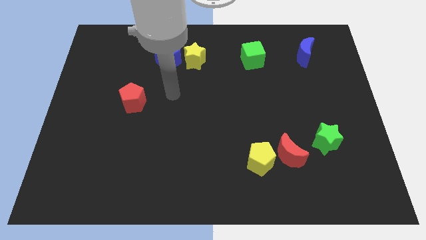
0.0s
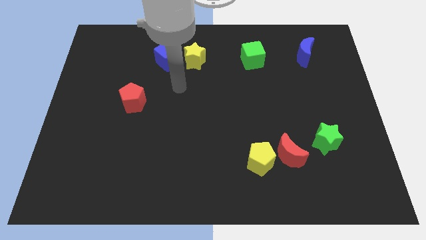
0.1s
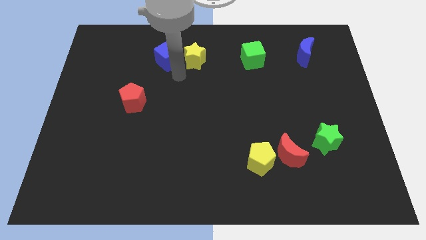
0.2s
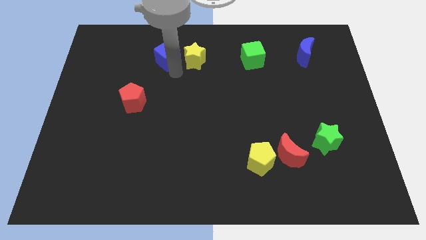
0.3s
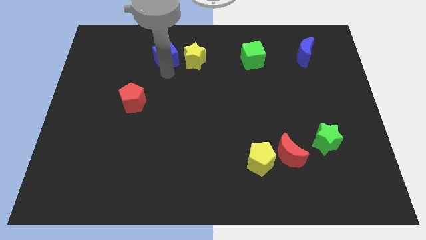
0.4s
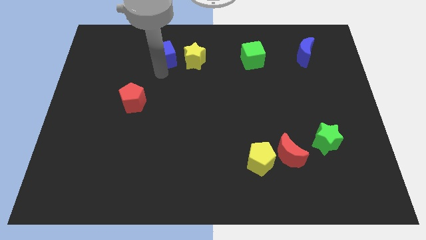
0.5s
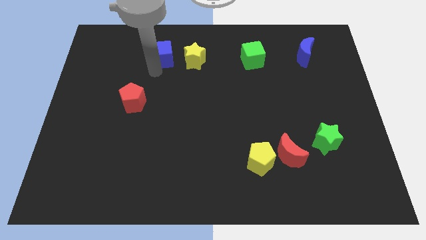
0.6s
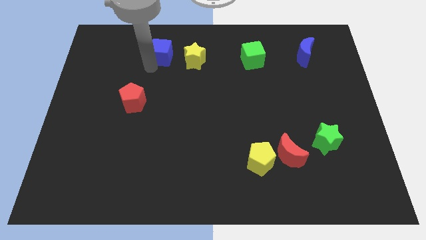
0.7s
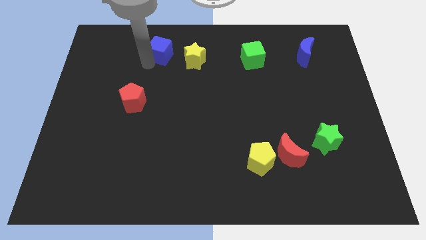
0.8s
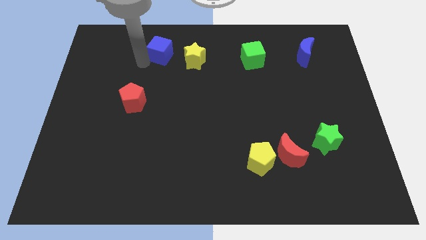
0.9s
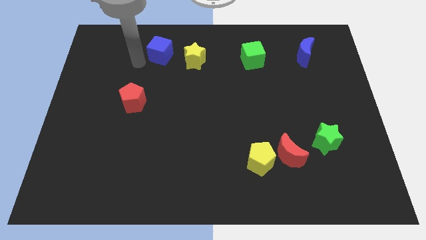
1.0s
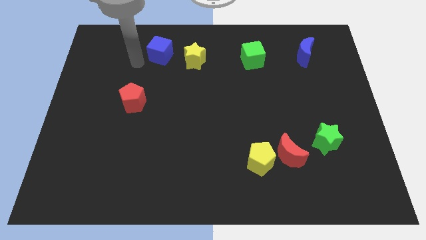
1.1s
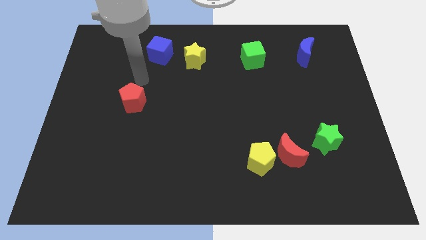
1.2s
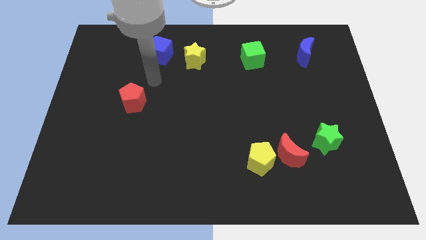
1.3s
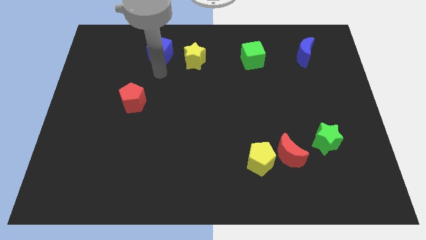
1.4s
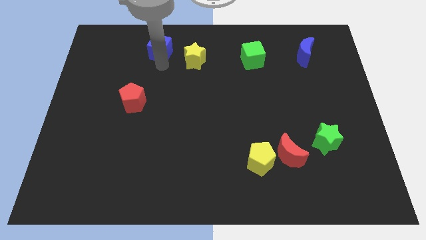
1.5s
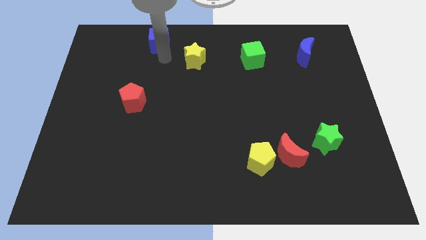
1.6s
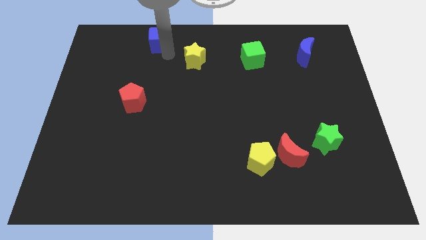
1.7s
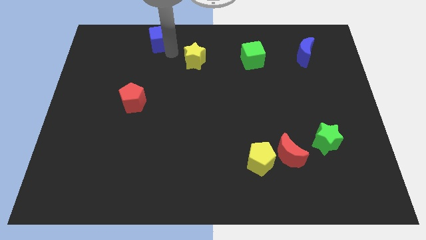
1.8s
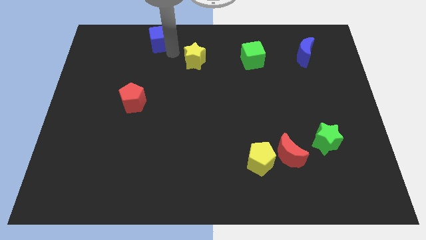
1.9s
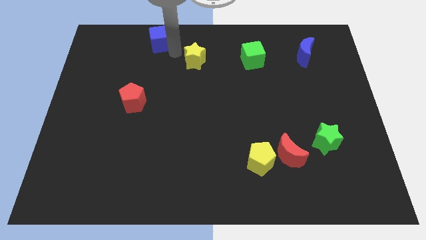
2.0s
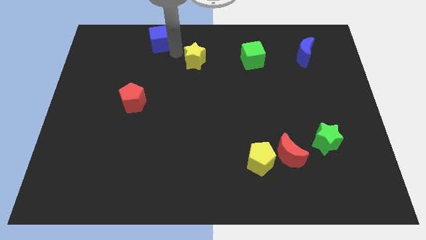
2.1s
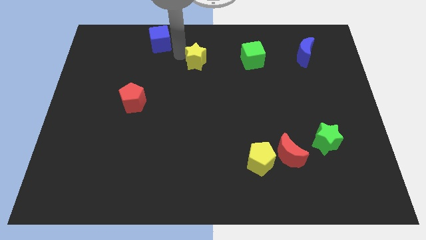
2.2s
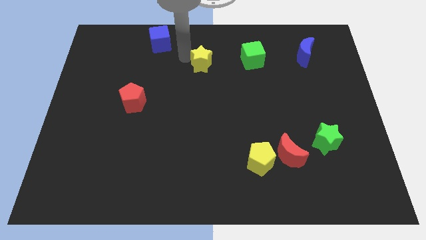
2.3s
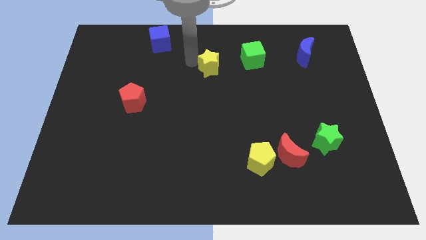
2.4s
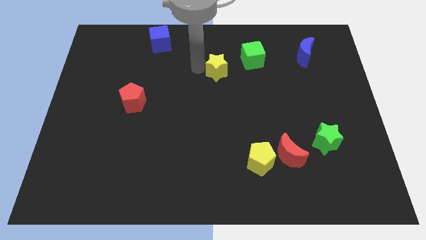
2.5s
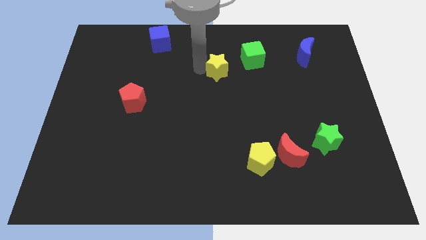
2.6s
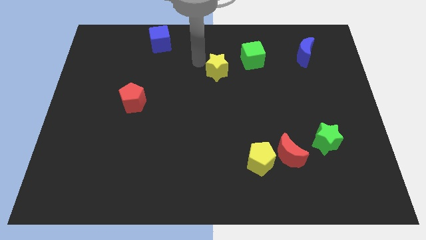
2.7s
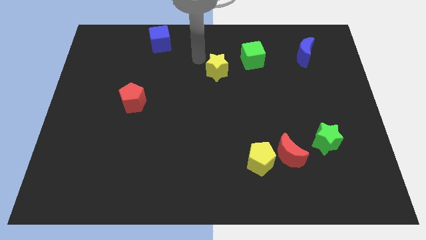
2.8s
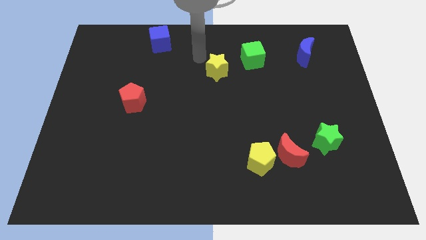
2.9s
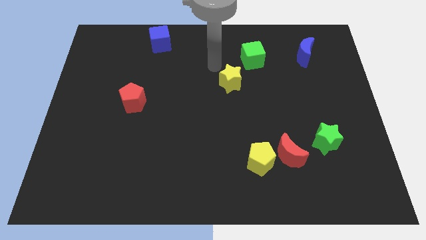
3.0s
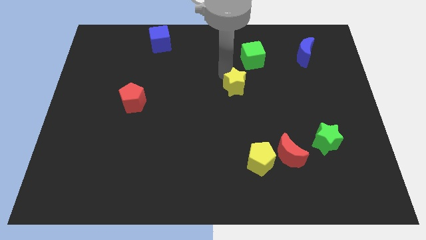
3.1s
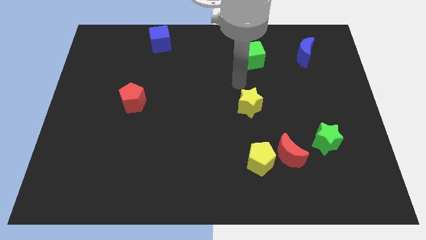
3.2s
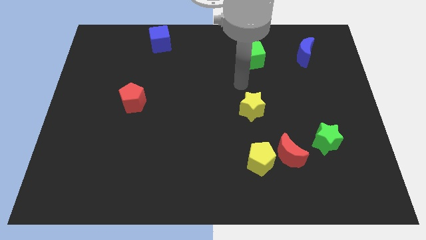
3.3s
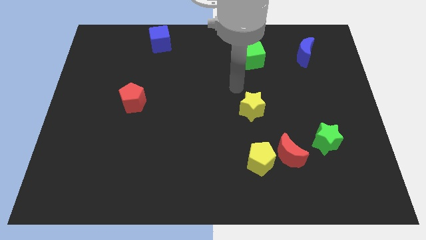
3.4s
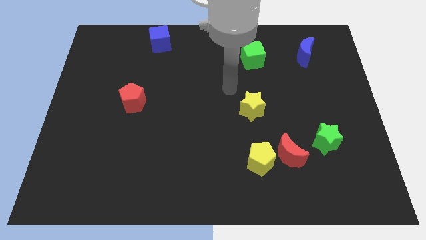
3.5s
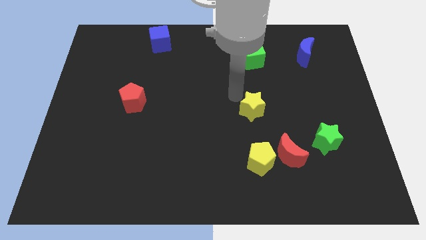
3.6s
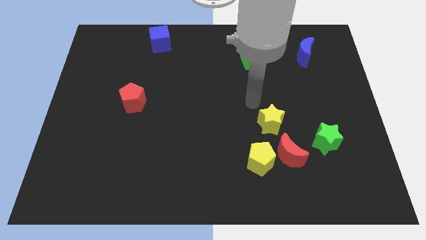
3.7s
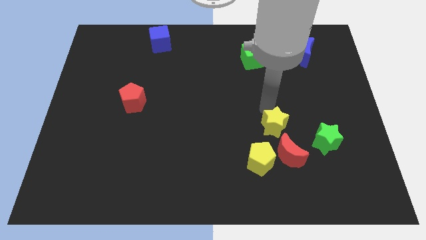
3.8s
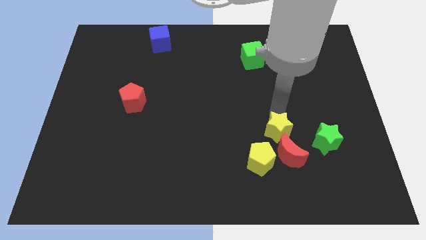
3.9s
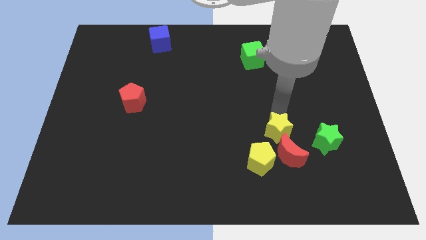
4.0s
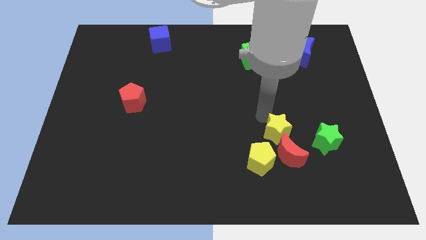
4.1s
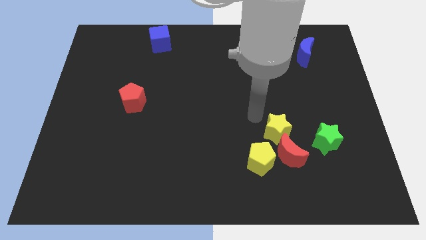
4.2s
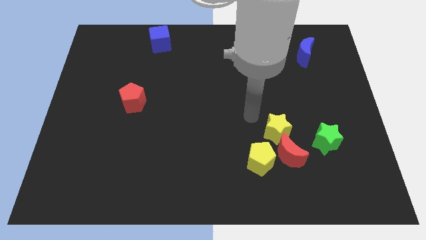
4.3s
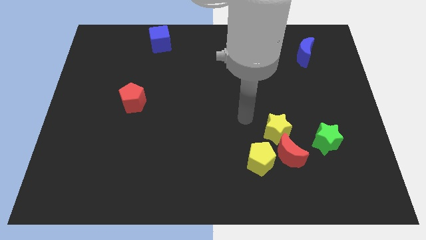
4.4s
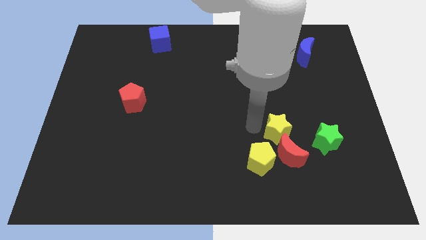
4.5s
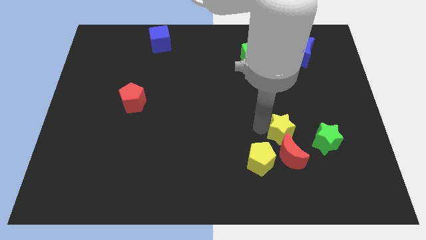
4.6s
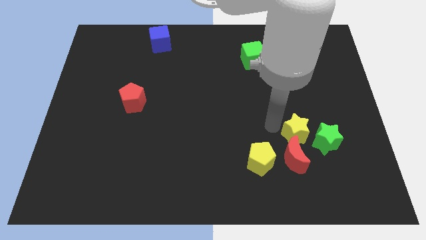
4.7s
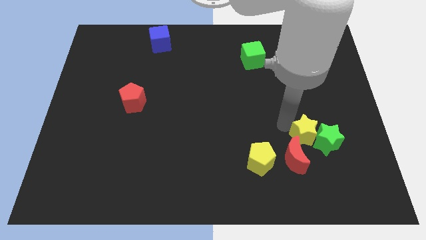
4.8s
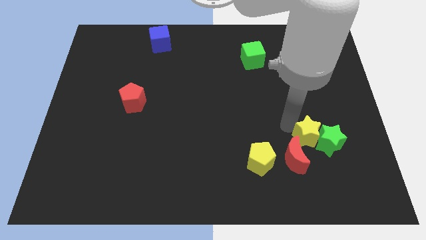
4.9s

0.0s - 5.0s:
slide the yellow star to the green star

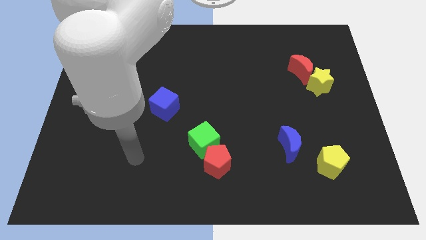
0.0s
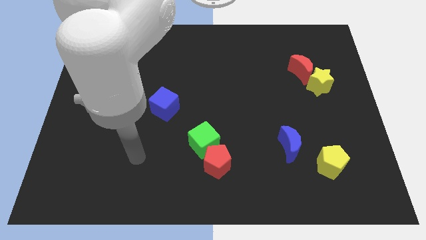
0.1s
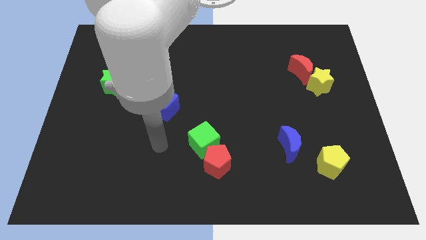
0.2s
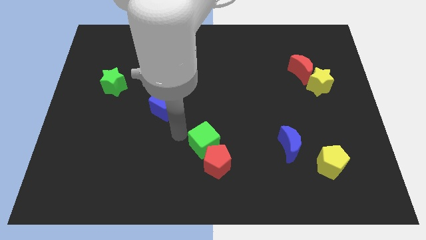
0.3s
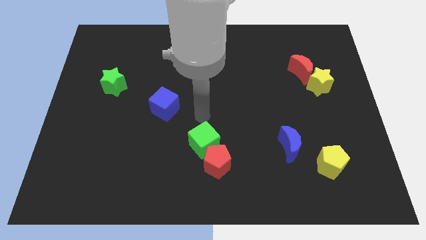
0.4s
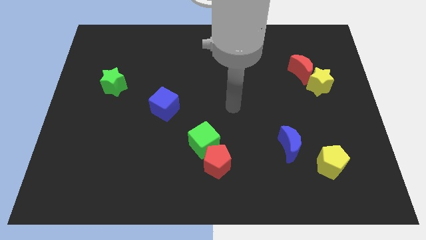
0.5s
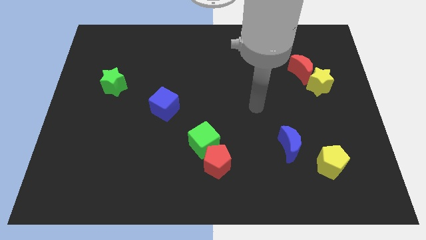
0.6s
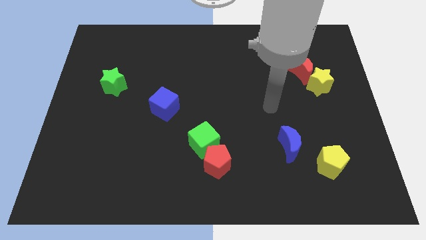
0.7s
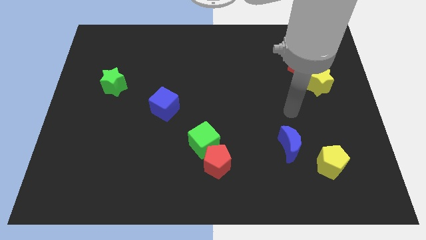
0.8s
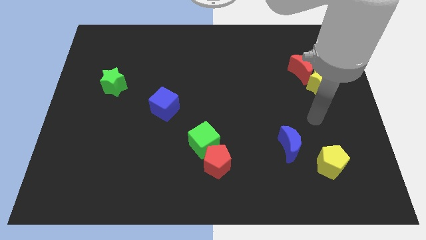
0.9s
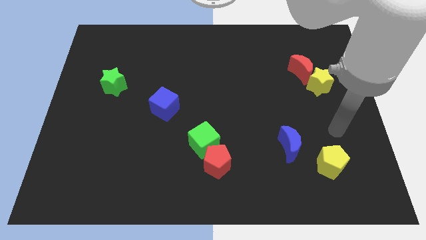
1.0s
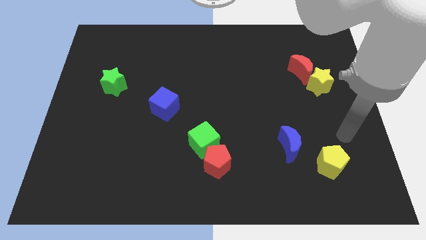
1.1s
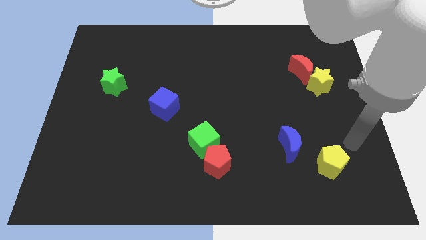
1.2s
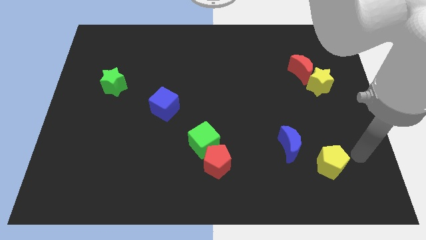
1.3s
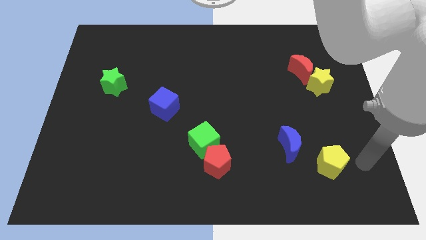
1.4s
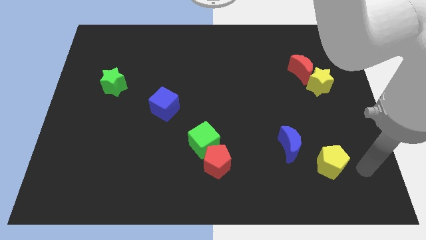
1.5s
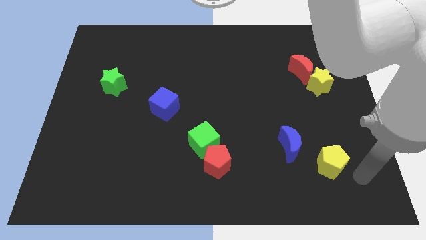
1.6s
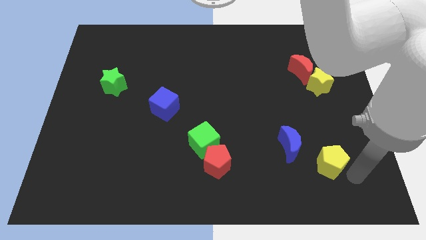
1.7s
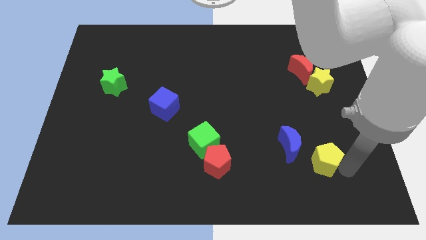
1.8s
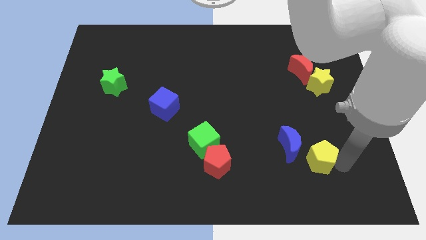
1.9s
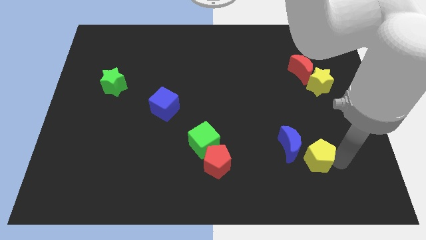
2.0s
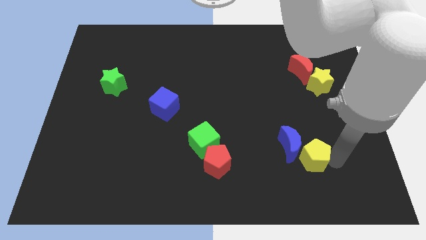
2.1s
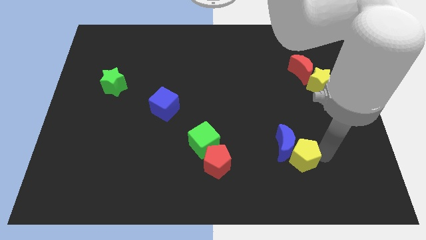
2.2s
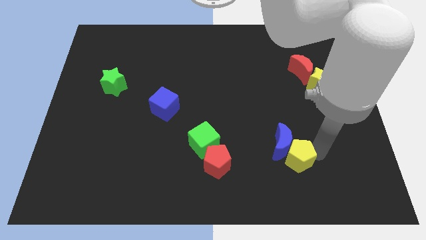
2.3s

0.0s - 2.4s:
move the yellow pentagon to the blue moon

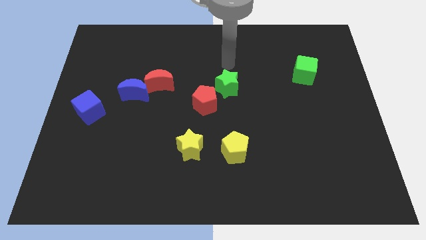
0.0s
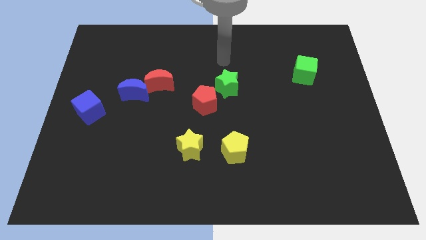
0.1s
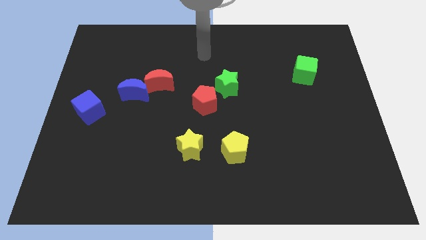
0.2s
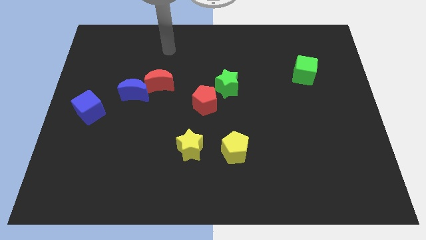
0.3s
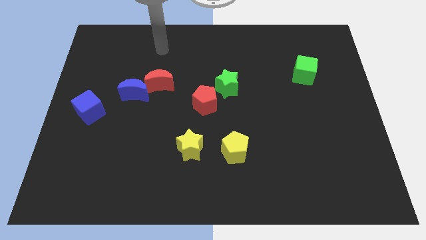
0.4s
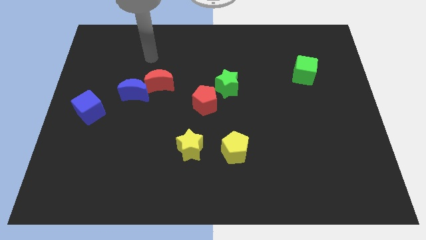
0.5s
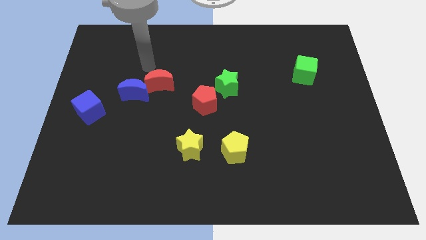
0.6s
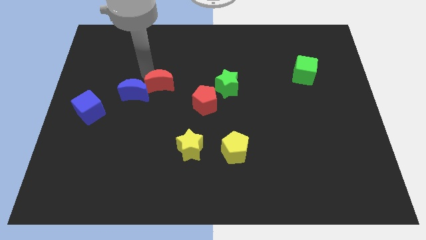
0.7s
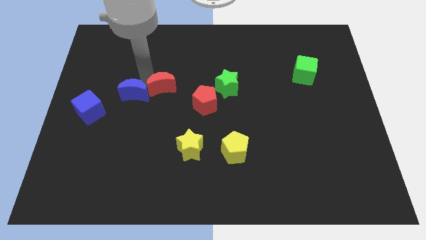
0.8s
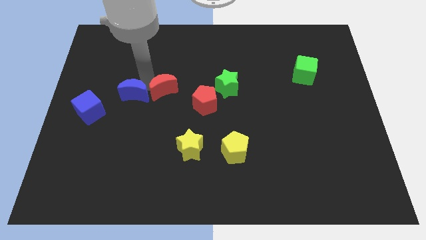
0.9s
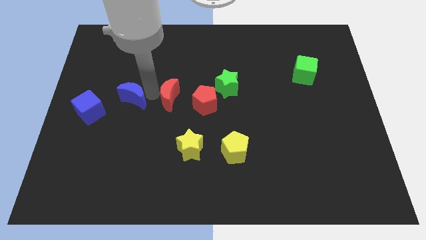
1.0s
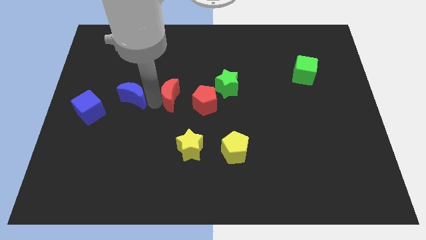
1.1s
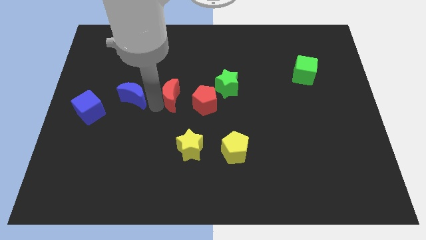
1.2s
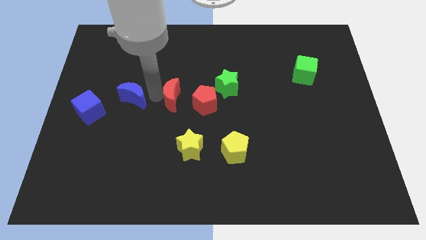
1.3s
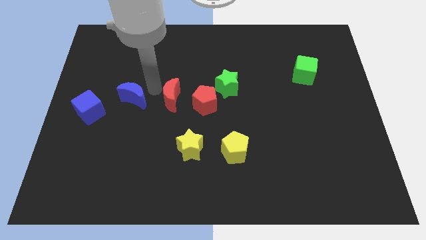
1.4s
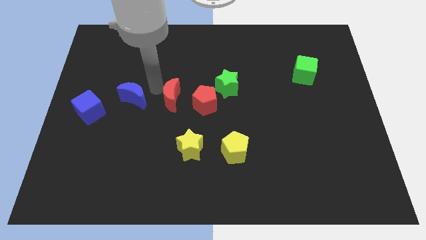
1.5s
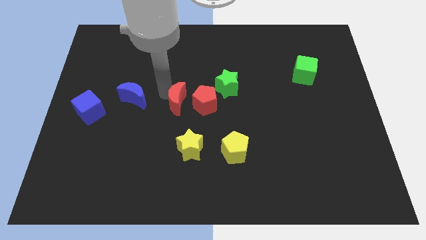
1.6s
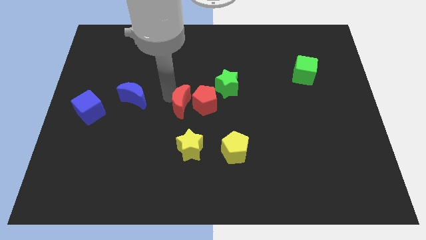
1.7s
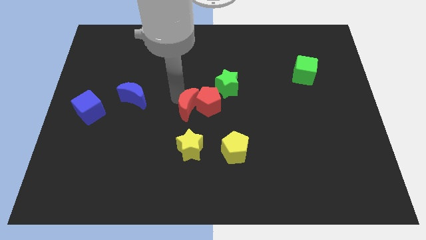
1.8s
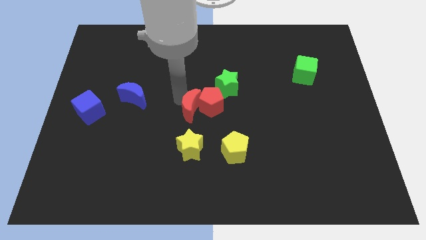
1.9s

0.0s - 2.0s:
put the red moon towards the red pentagon
